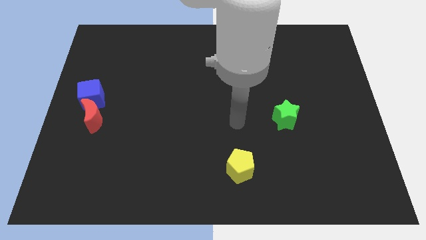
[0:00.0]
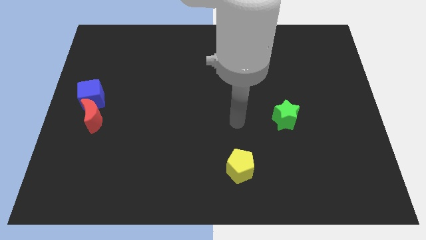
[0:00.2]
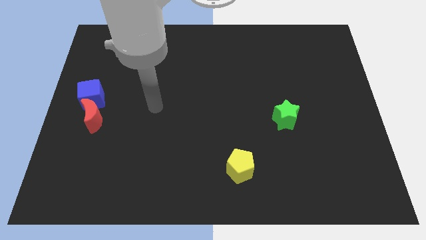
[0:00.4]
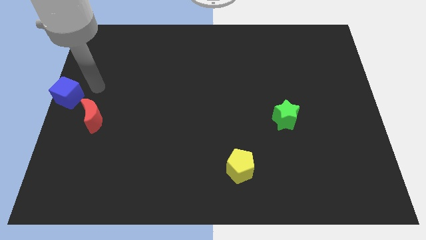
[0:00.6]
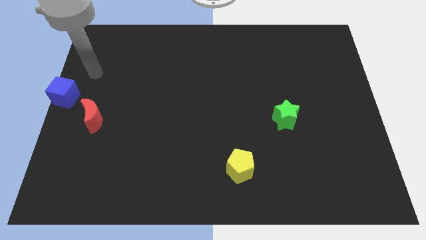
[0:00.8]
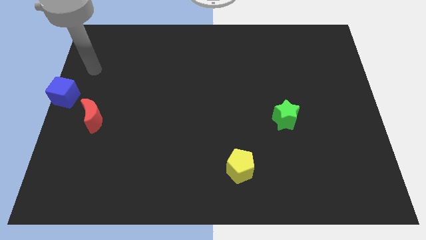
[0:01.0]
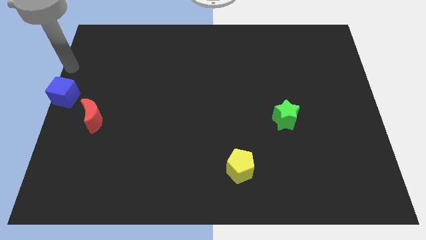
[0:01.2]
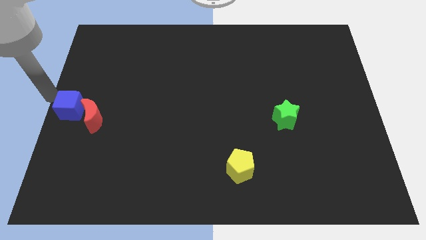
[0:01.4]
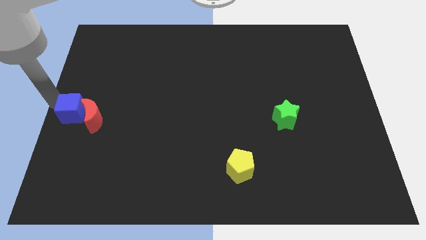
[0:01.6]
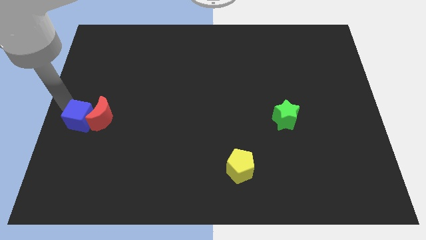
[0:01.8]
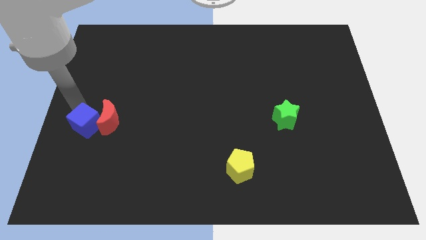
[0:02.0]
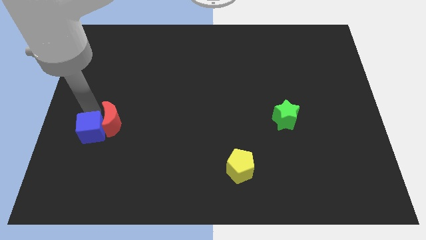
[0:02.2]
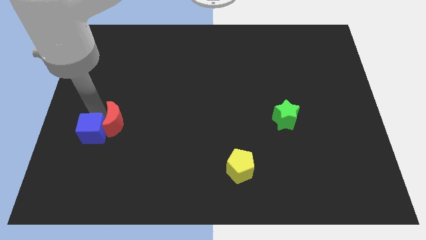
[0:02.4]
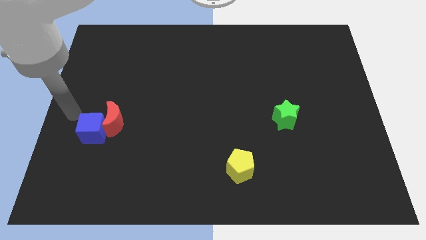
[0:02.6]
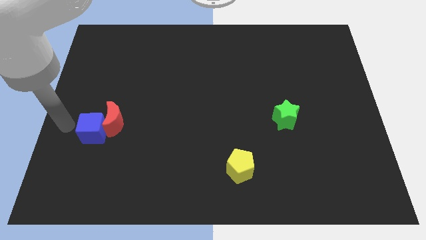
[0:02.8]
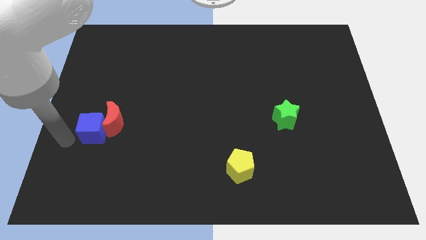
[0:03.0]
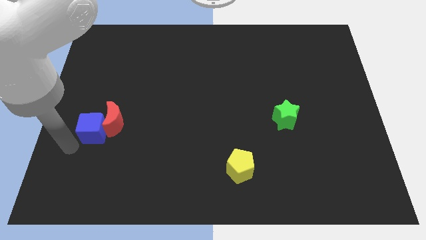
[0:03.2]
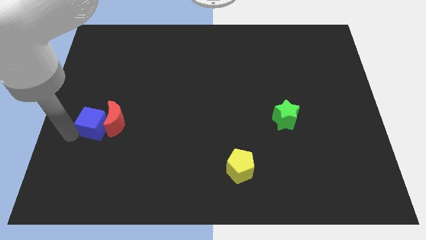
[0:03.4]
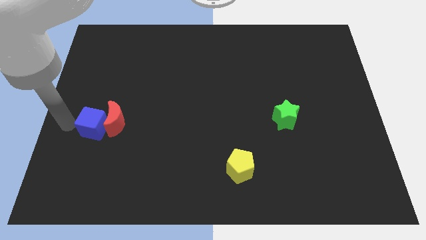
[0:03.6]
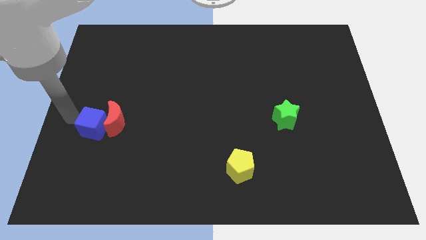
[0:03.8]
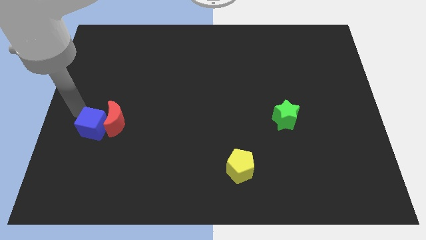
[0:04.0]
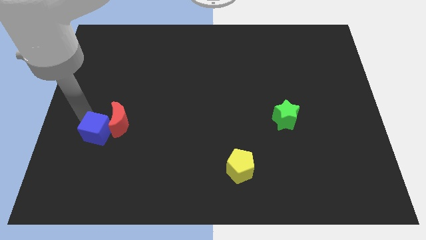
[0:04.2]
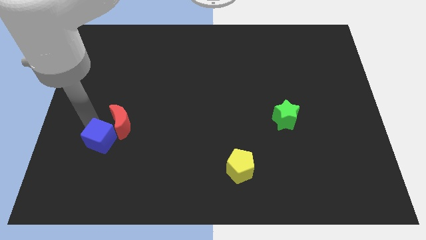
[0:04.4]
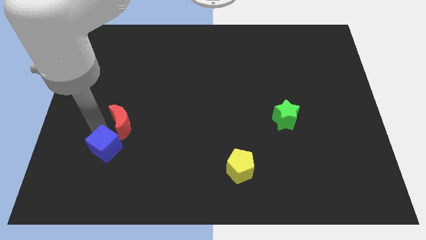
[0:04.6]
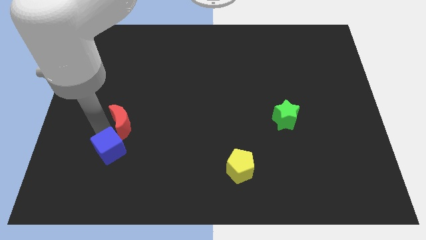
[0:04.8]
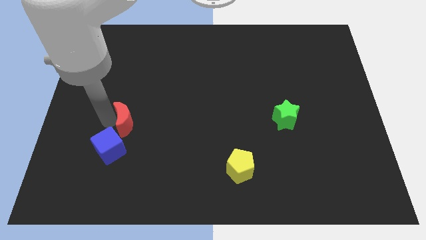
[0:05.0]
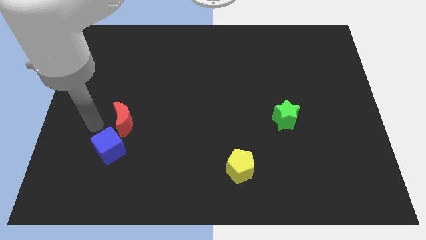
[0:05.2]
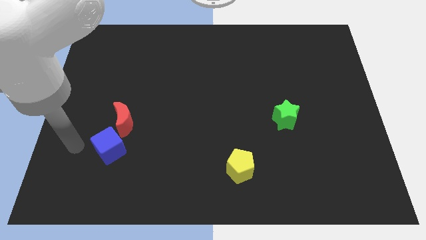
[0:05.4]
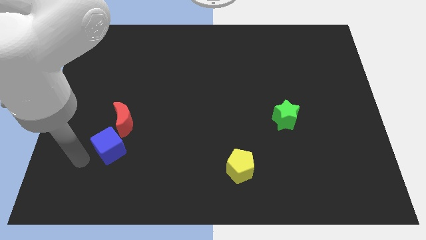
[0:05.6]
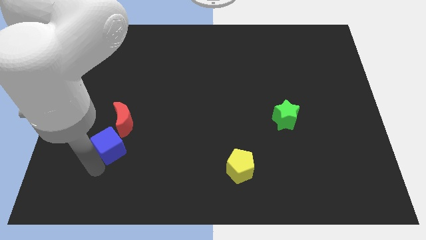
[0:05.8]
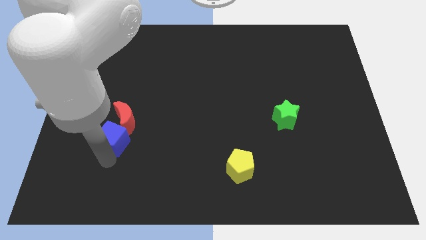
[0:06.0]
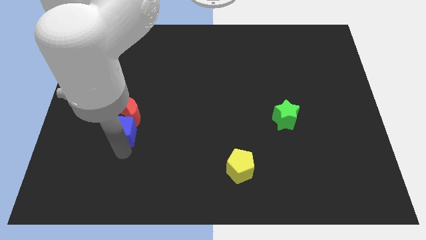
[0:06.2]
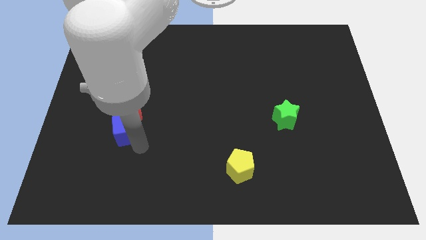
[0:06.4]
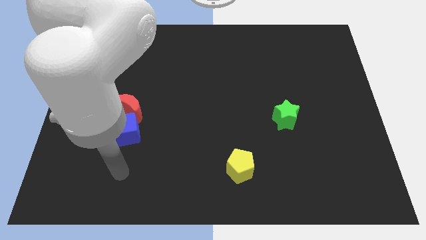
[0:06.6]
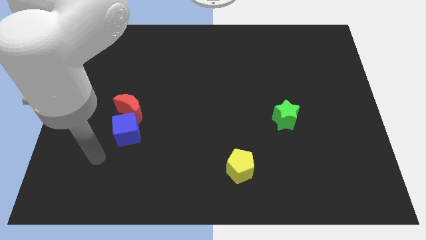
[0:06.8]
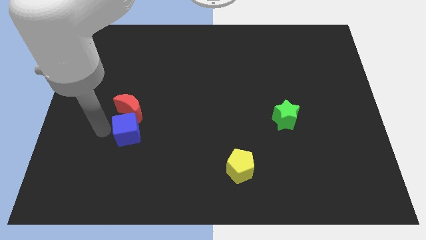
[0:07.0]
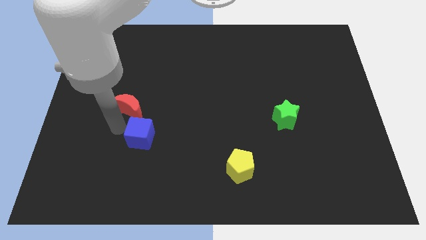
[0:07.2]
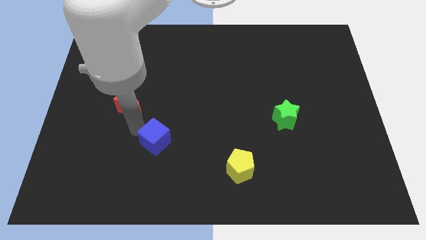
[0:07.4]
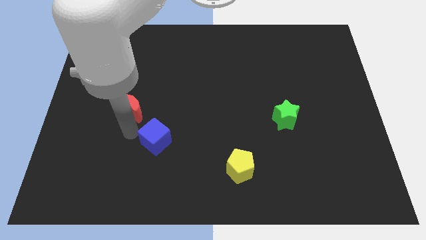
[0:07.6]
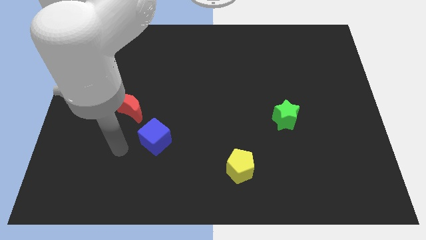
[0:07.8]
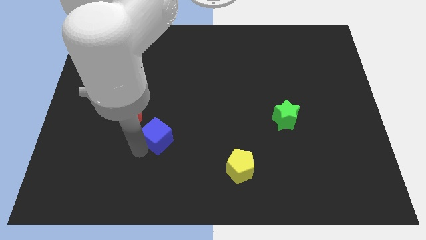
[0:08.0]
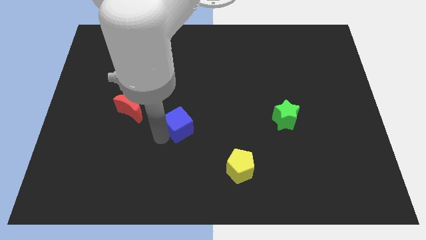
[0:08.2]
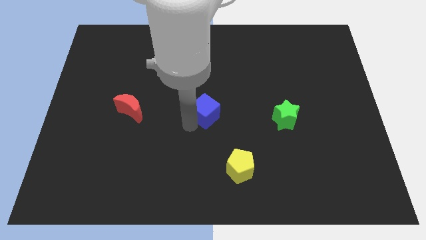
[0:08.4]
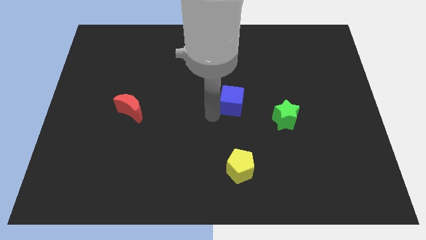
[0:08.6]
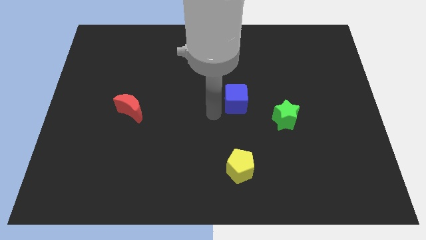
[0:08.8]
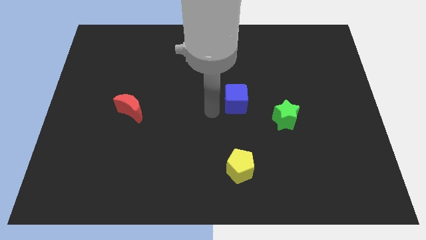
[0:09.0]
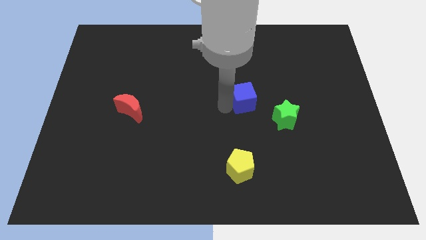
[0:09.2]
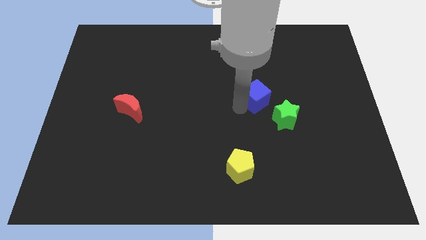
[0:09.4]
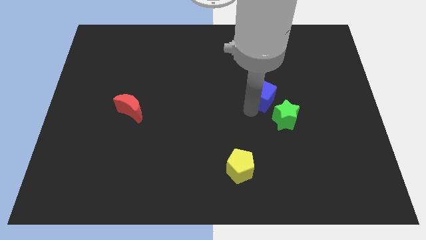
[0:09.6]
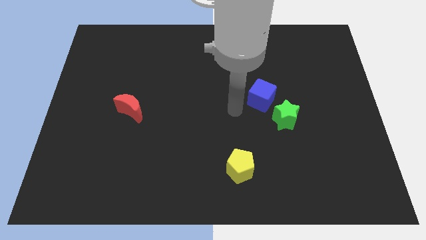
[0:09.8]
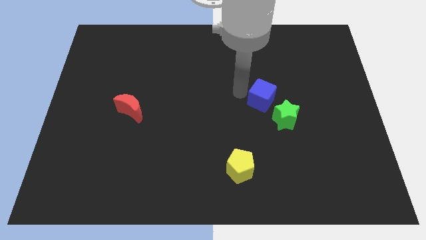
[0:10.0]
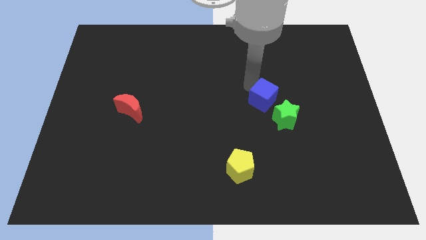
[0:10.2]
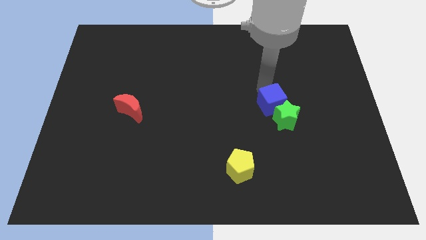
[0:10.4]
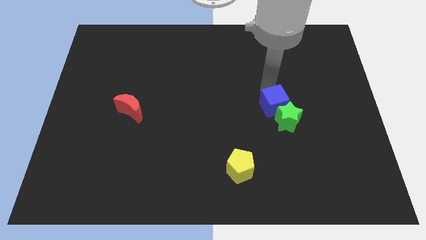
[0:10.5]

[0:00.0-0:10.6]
put the blue block close to the green star

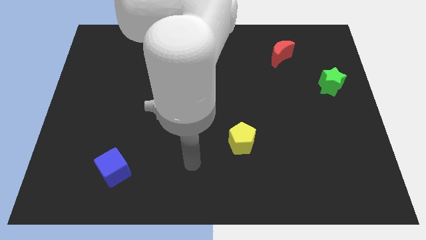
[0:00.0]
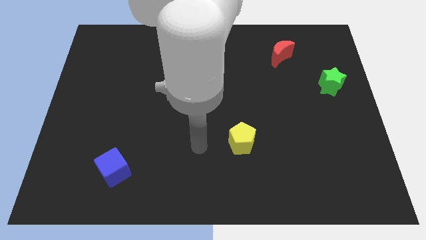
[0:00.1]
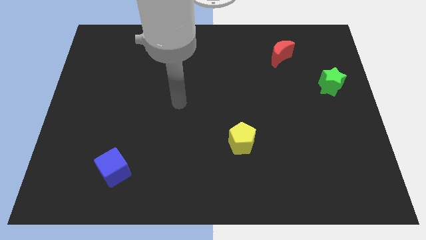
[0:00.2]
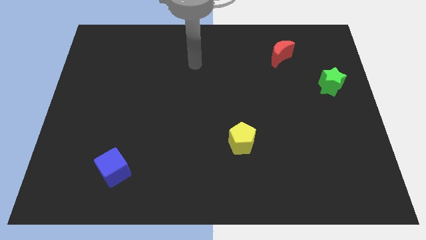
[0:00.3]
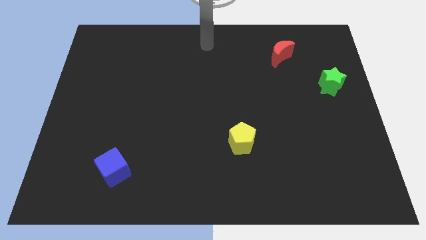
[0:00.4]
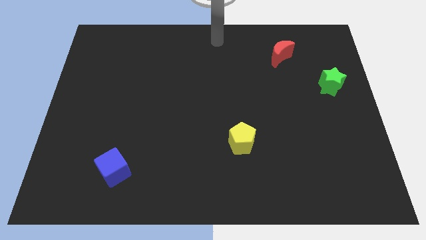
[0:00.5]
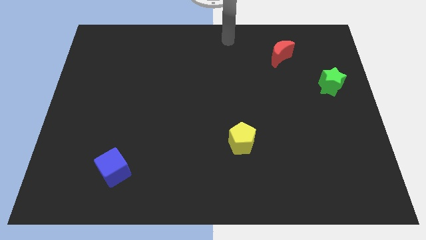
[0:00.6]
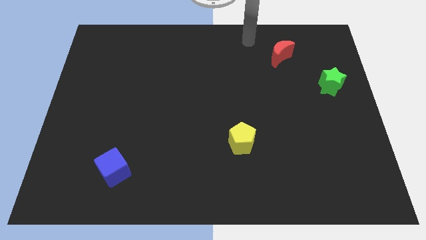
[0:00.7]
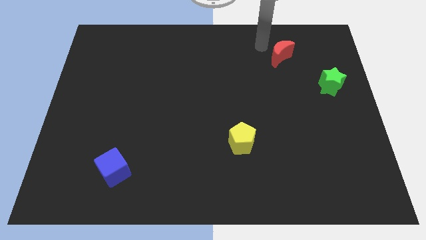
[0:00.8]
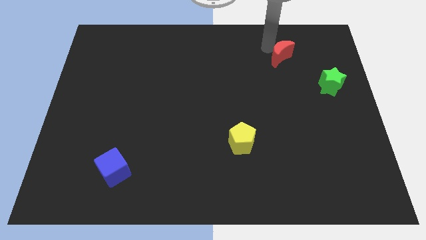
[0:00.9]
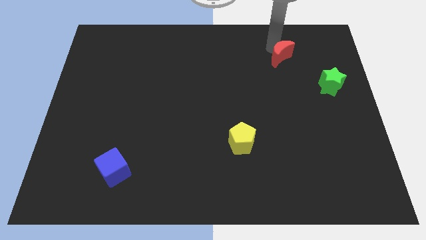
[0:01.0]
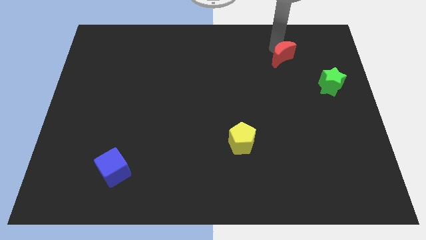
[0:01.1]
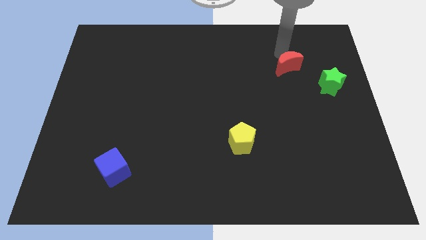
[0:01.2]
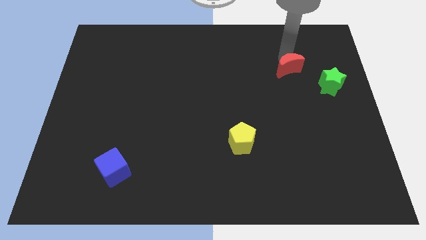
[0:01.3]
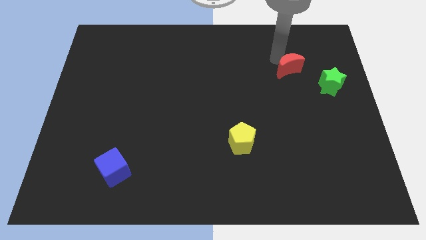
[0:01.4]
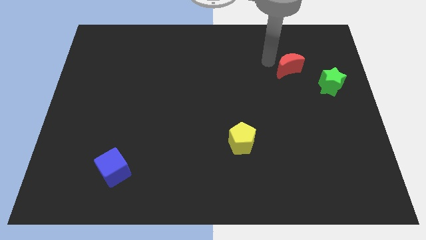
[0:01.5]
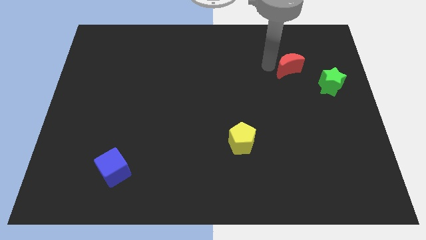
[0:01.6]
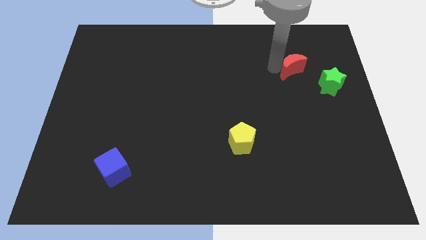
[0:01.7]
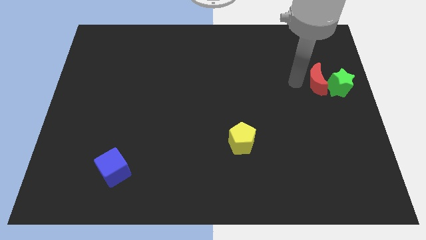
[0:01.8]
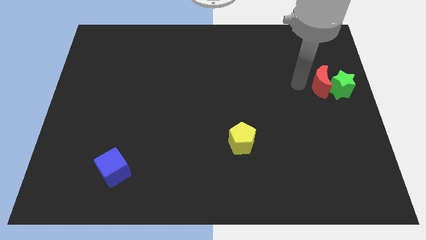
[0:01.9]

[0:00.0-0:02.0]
slide the moon close to the green star

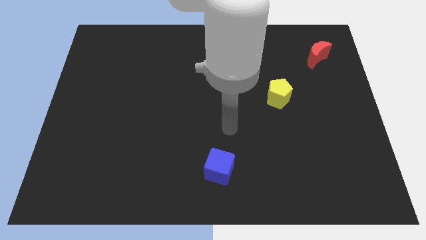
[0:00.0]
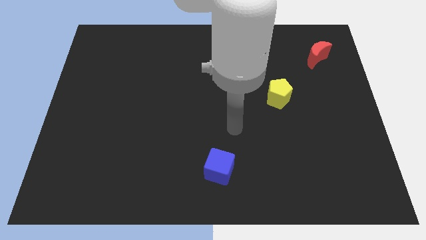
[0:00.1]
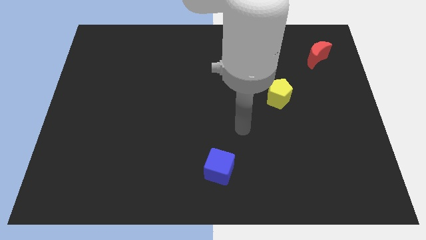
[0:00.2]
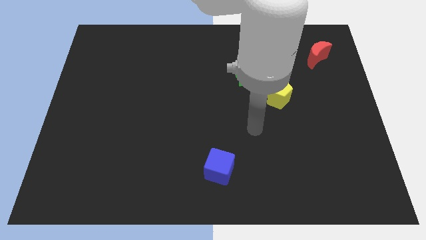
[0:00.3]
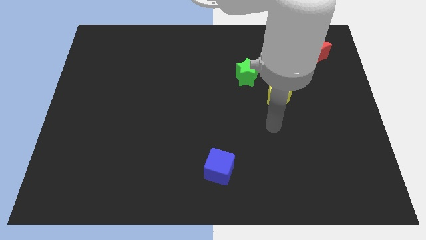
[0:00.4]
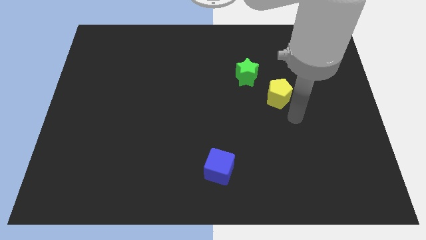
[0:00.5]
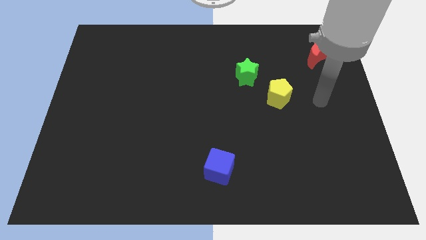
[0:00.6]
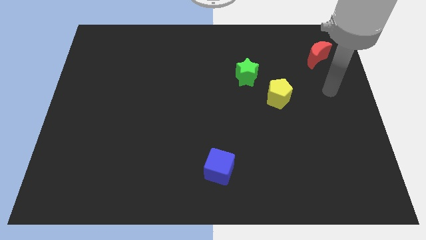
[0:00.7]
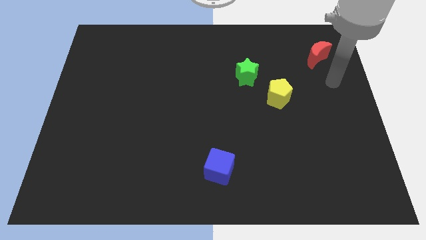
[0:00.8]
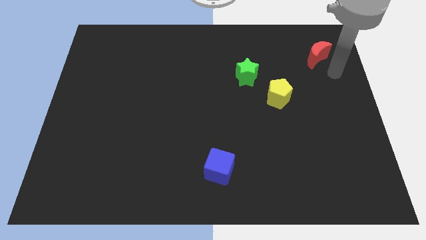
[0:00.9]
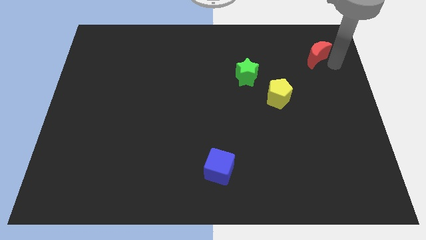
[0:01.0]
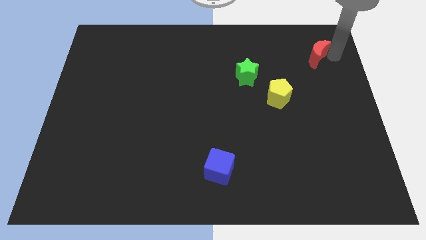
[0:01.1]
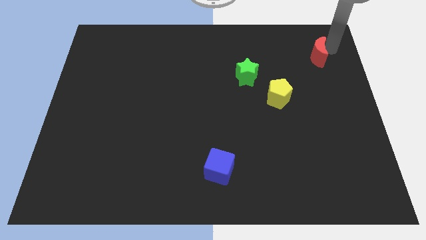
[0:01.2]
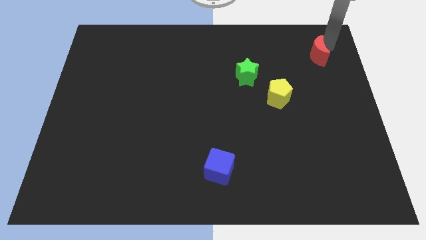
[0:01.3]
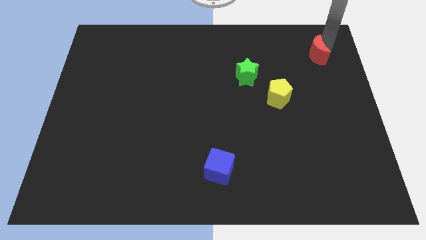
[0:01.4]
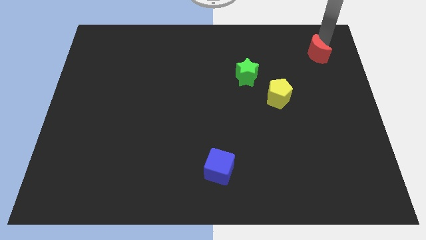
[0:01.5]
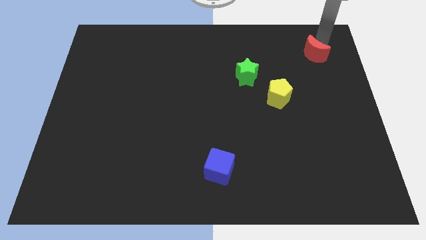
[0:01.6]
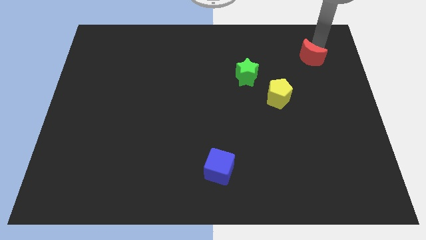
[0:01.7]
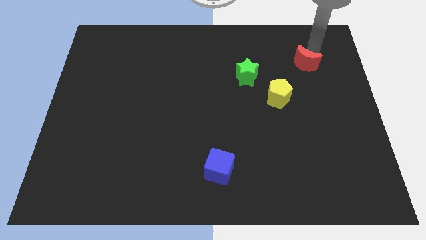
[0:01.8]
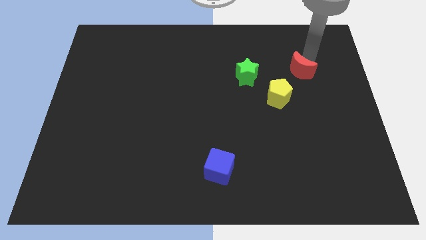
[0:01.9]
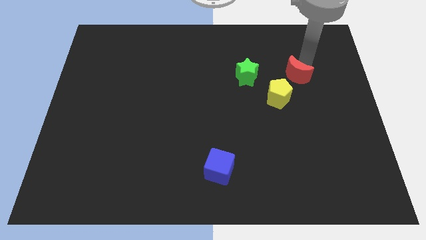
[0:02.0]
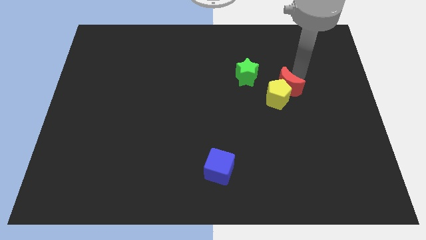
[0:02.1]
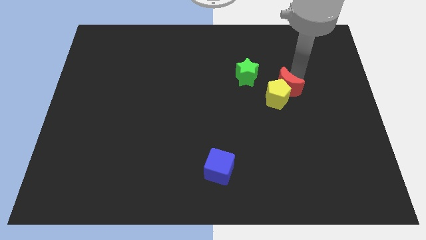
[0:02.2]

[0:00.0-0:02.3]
move the red block to the pentagon
